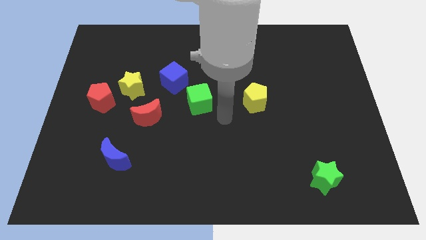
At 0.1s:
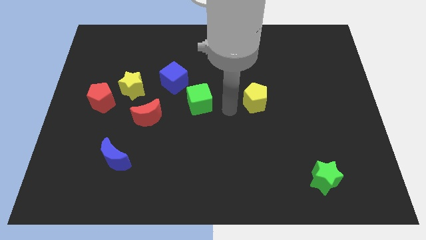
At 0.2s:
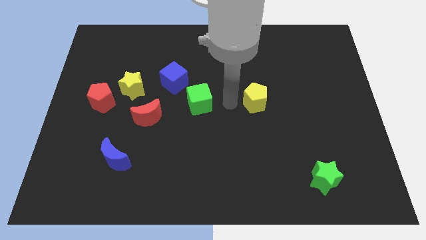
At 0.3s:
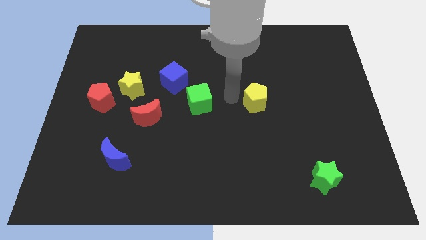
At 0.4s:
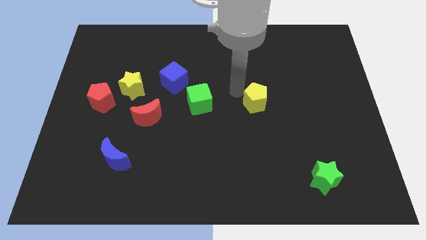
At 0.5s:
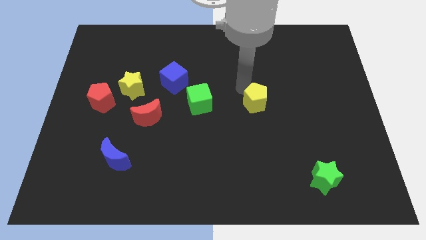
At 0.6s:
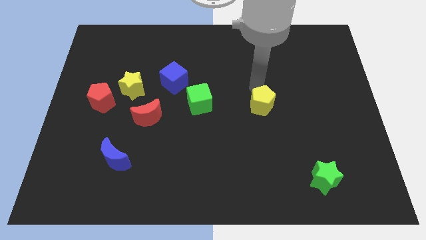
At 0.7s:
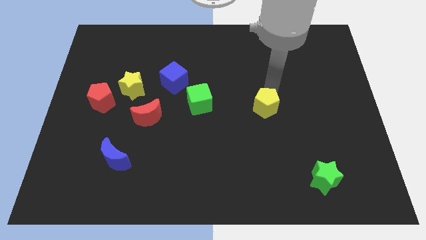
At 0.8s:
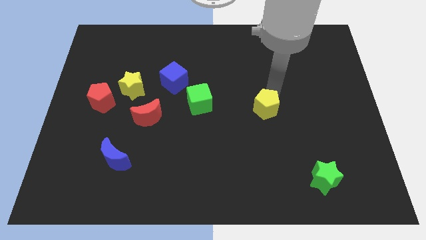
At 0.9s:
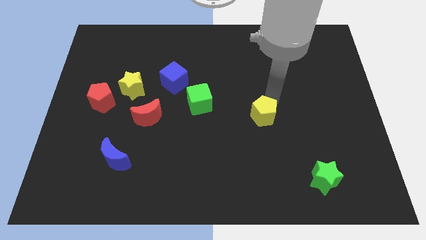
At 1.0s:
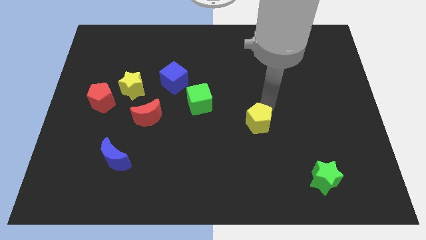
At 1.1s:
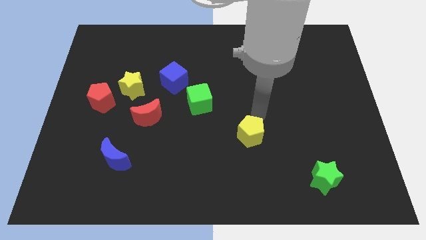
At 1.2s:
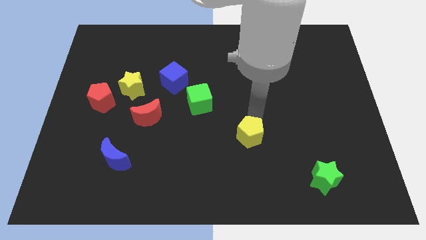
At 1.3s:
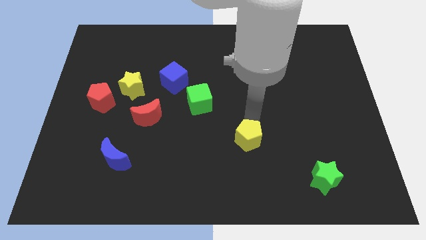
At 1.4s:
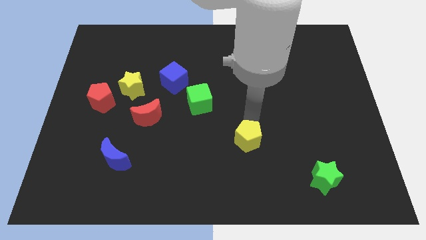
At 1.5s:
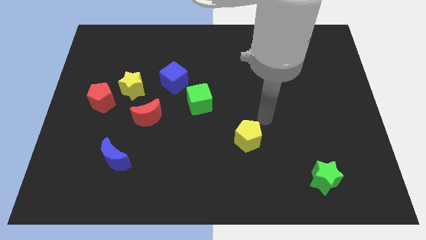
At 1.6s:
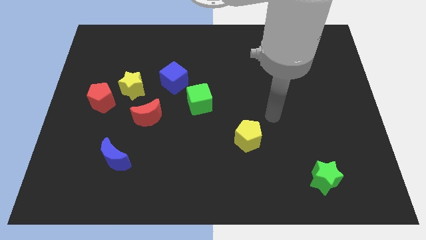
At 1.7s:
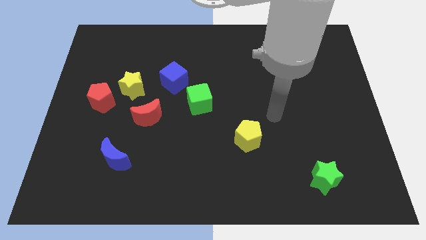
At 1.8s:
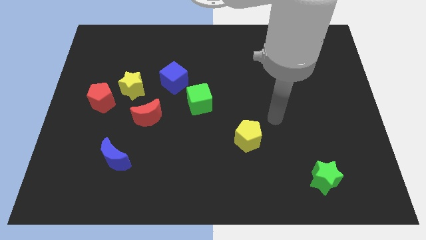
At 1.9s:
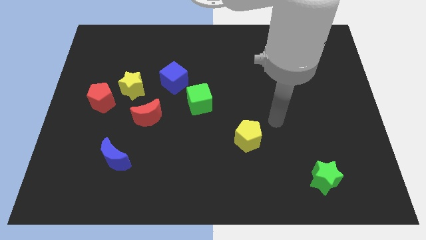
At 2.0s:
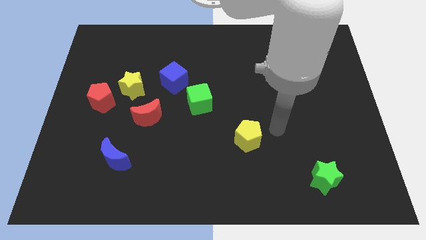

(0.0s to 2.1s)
push the yellow pentagon between green blocks

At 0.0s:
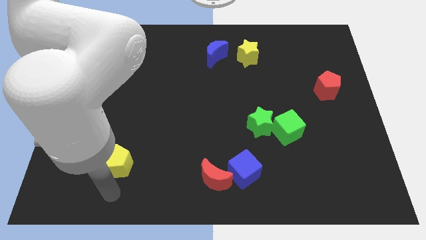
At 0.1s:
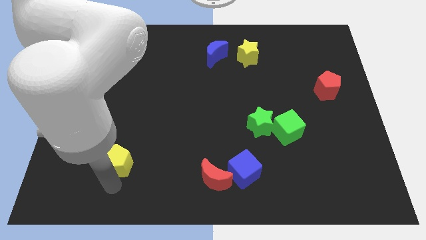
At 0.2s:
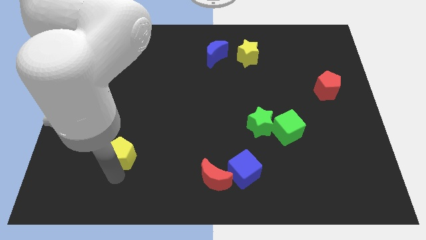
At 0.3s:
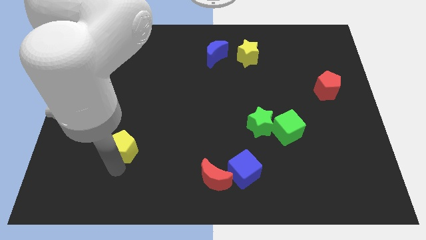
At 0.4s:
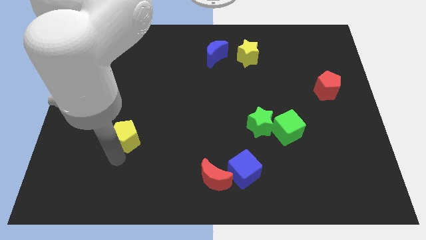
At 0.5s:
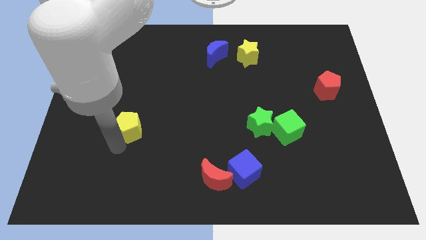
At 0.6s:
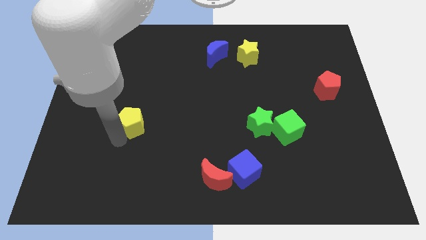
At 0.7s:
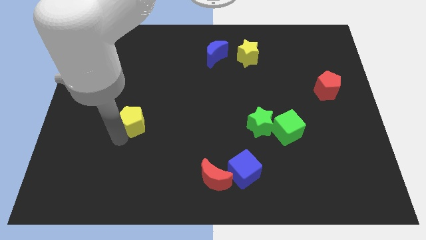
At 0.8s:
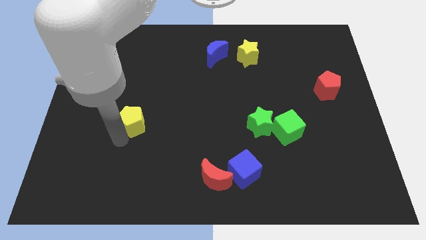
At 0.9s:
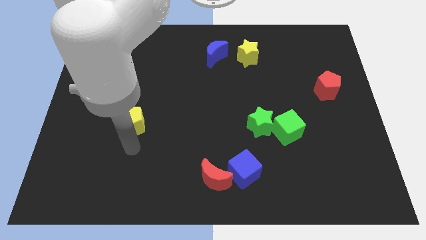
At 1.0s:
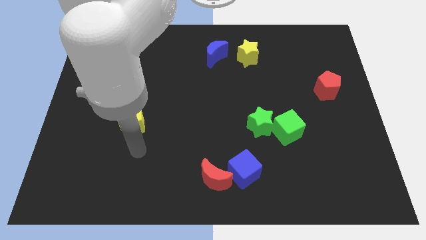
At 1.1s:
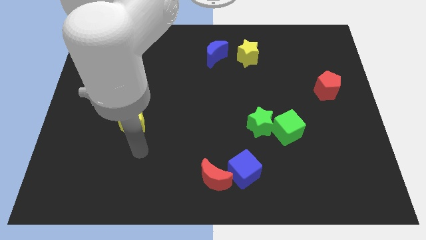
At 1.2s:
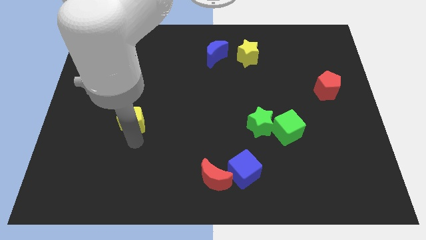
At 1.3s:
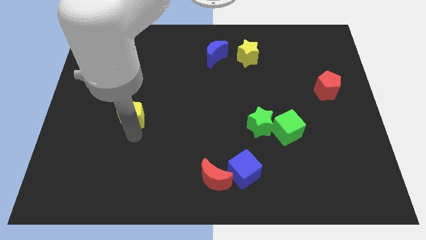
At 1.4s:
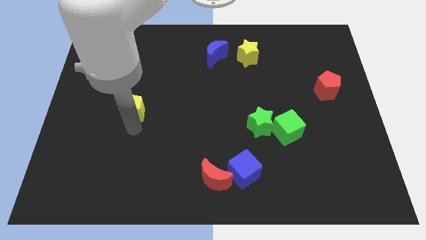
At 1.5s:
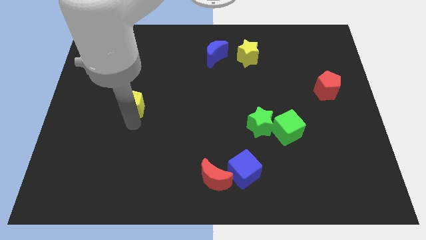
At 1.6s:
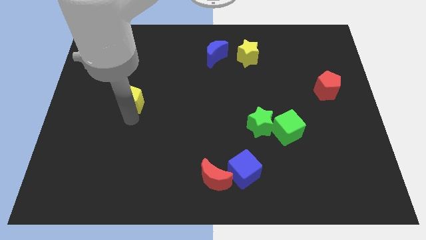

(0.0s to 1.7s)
move the yellow pentagon towards the top

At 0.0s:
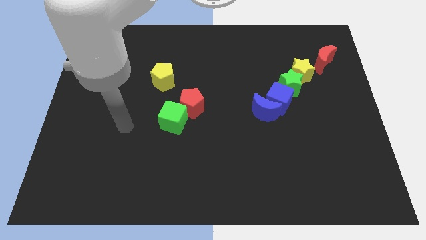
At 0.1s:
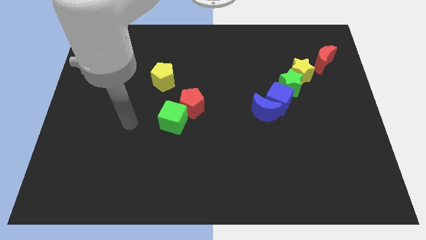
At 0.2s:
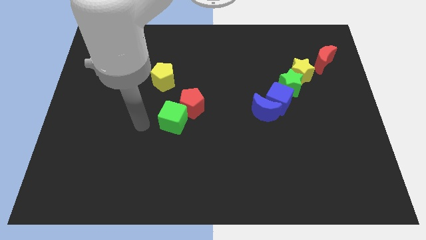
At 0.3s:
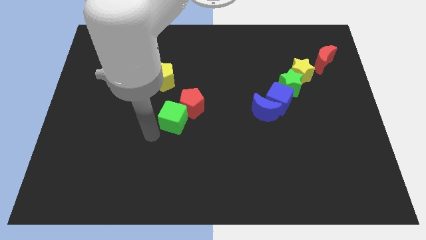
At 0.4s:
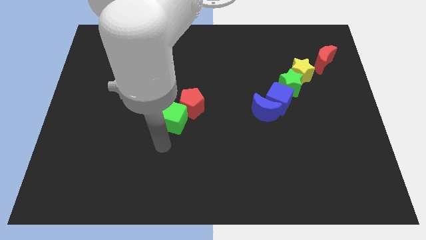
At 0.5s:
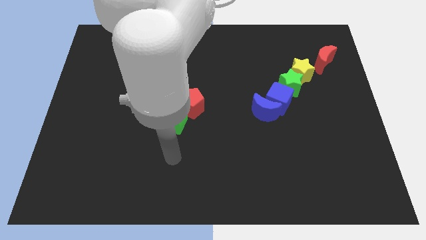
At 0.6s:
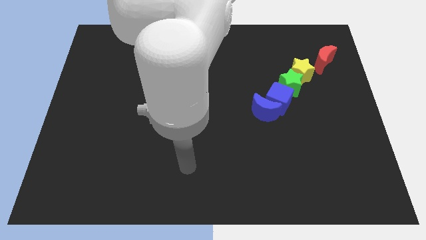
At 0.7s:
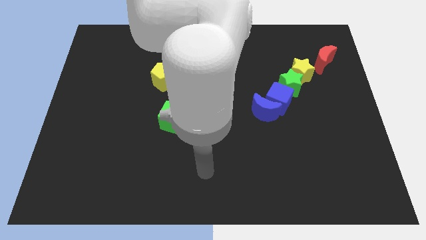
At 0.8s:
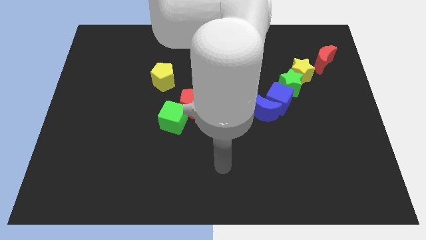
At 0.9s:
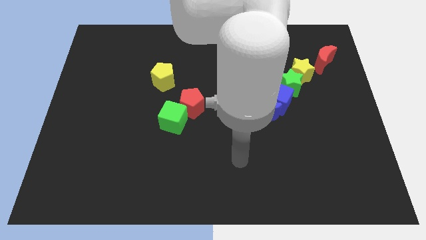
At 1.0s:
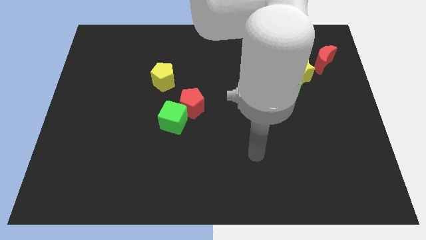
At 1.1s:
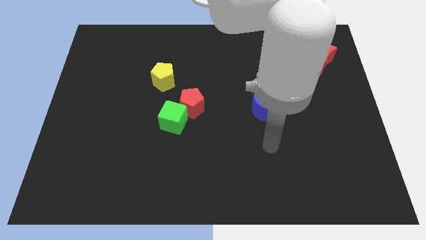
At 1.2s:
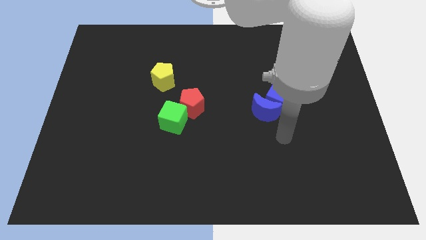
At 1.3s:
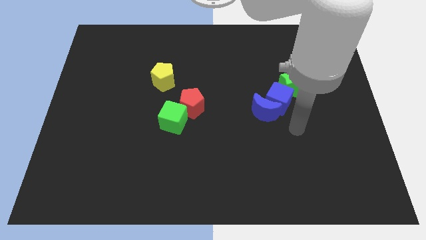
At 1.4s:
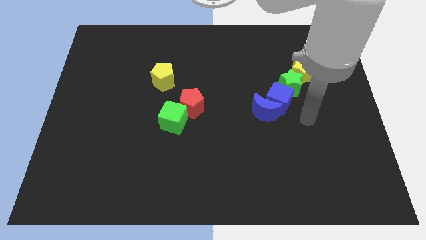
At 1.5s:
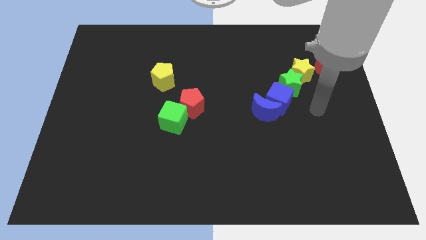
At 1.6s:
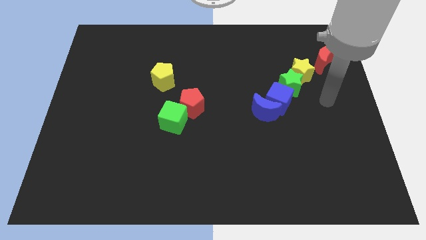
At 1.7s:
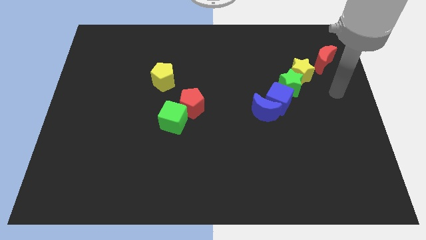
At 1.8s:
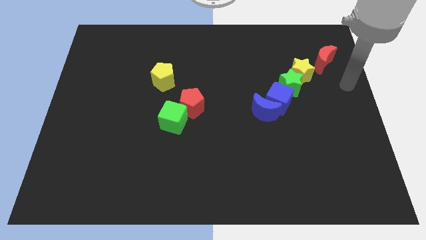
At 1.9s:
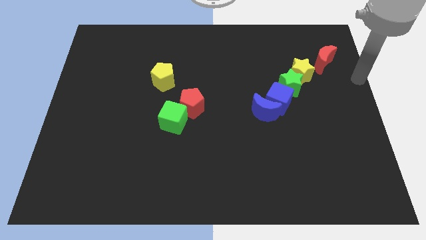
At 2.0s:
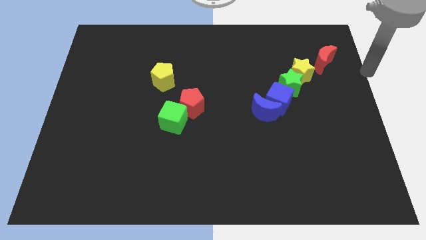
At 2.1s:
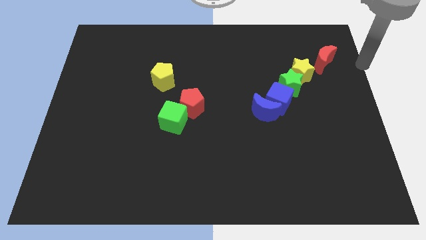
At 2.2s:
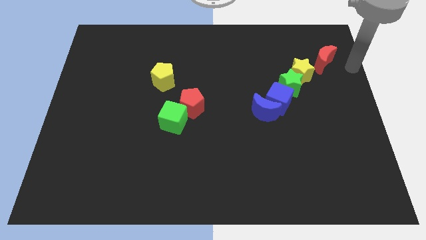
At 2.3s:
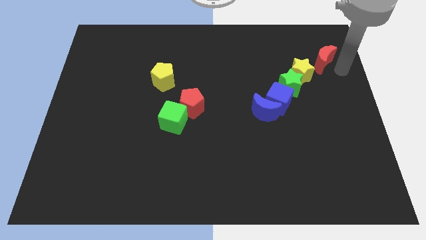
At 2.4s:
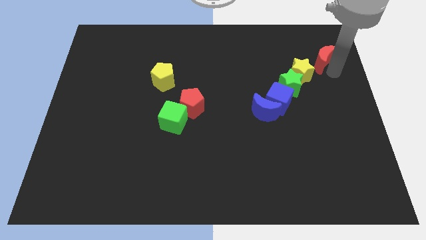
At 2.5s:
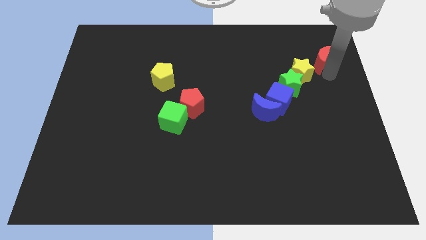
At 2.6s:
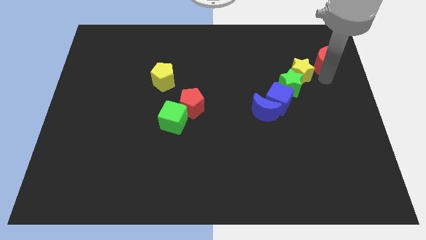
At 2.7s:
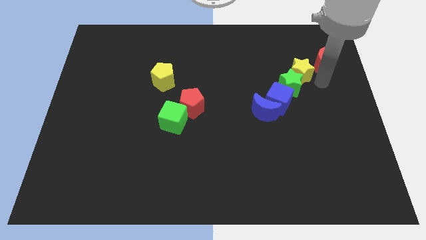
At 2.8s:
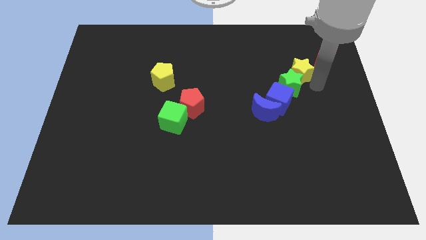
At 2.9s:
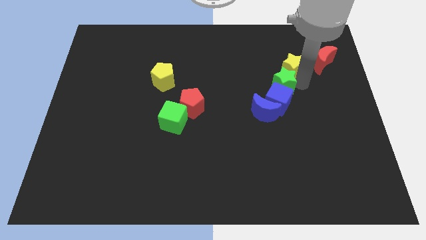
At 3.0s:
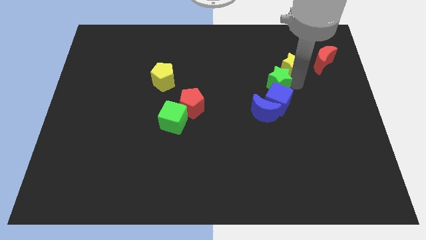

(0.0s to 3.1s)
push the green star towards left side of the board

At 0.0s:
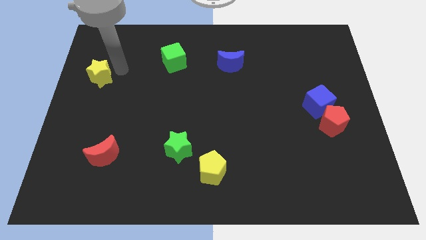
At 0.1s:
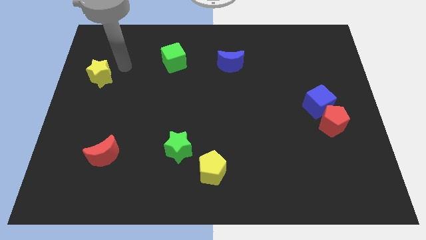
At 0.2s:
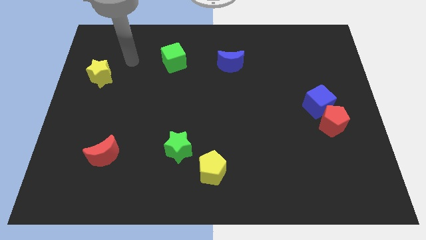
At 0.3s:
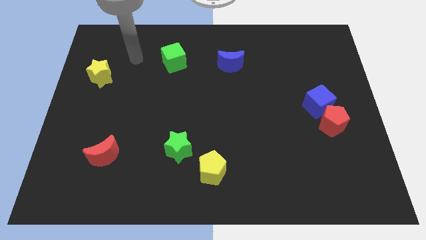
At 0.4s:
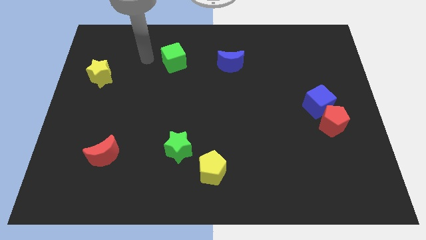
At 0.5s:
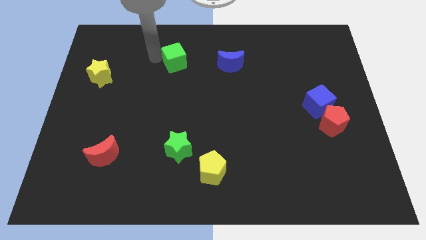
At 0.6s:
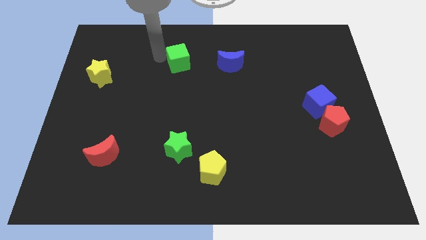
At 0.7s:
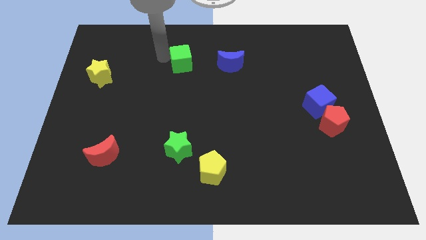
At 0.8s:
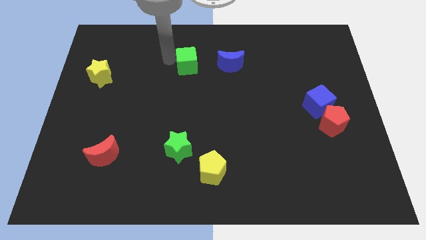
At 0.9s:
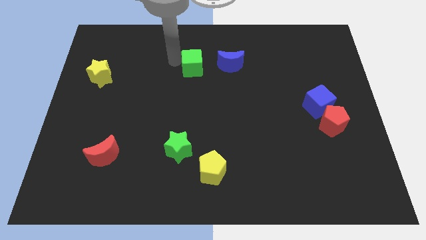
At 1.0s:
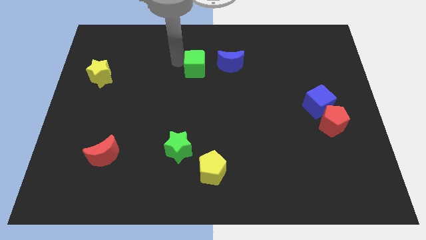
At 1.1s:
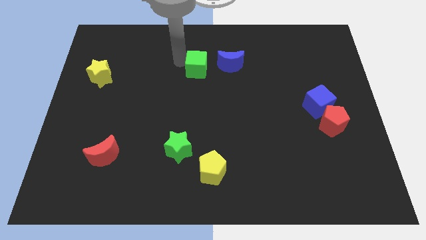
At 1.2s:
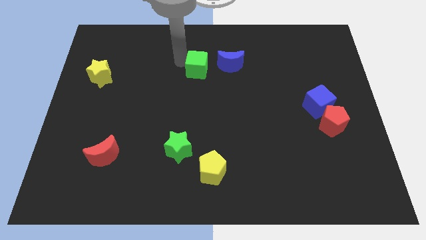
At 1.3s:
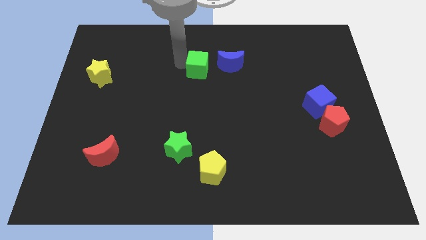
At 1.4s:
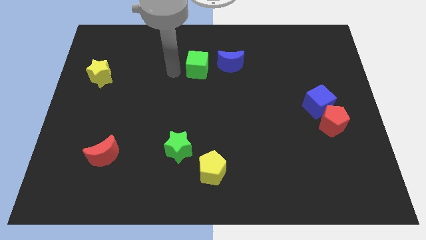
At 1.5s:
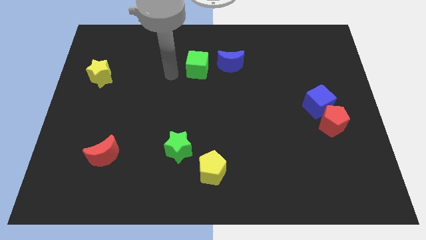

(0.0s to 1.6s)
push the green cube closer to the blue moon

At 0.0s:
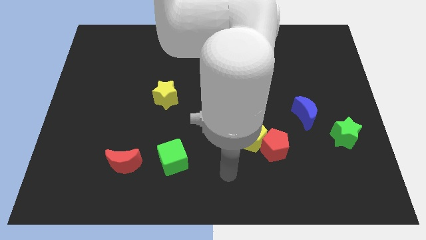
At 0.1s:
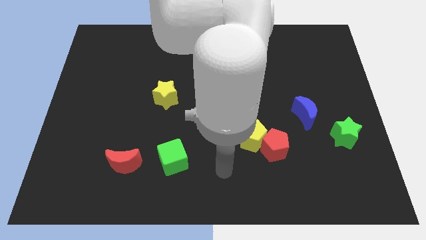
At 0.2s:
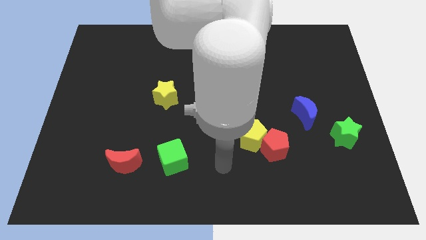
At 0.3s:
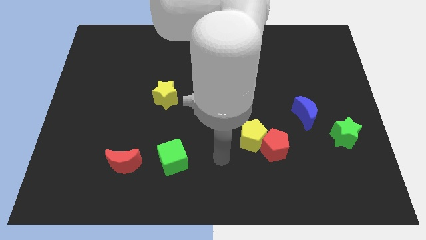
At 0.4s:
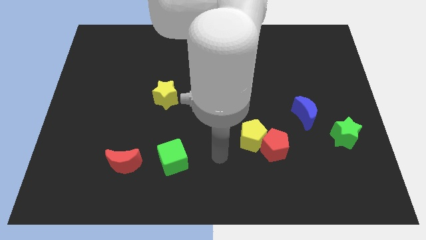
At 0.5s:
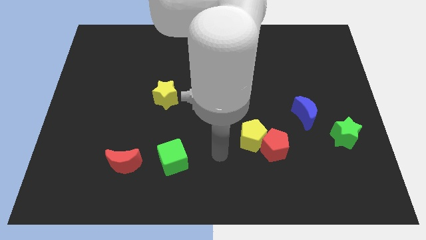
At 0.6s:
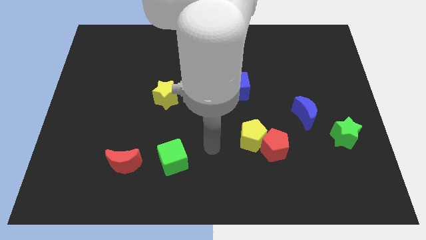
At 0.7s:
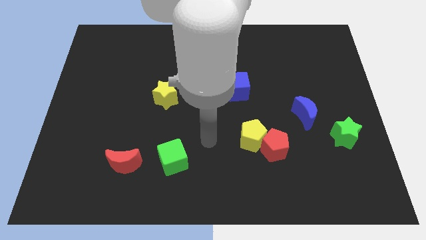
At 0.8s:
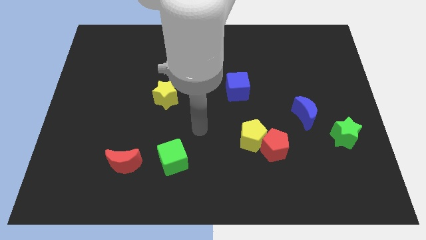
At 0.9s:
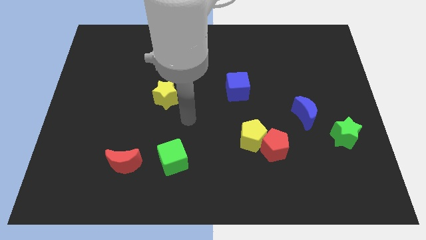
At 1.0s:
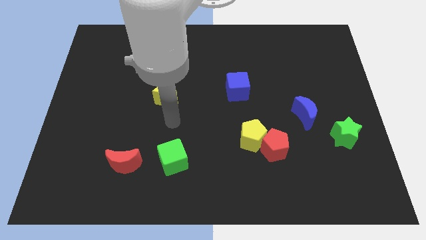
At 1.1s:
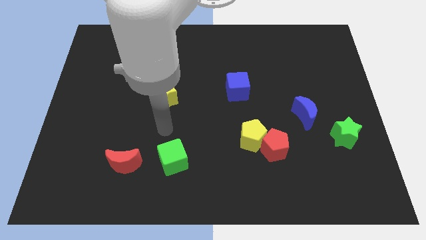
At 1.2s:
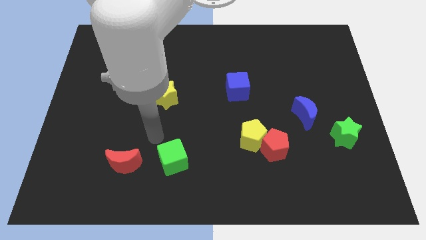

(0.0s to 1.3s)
move your arm above the green cube
